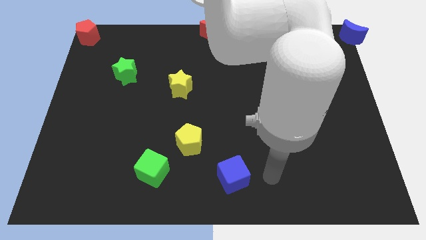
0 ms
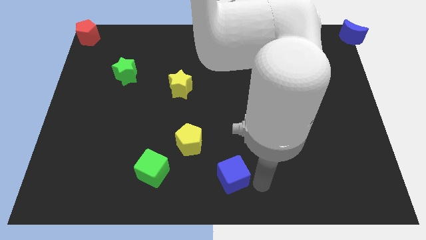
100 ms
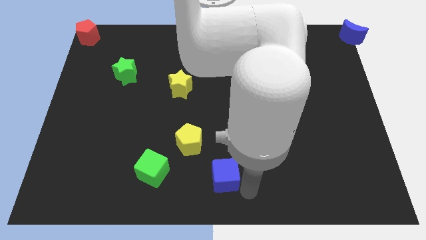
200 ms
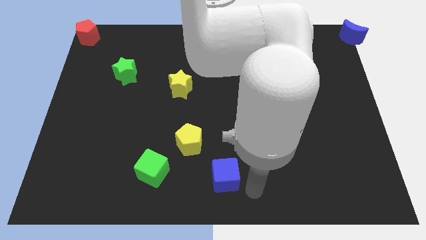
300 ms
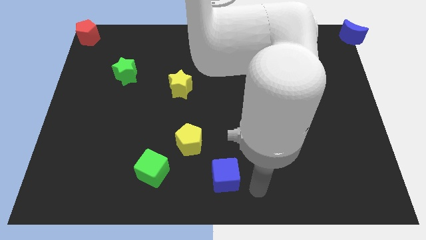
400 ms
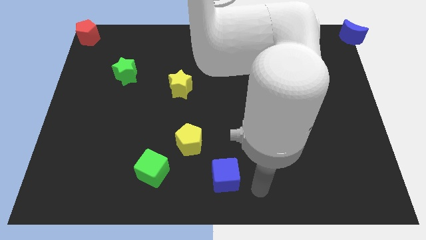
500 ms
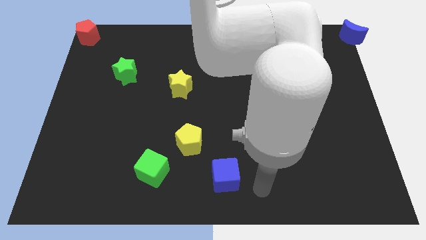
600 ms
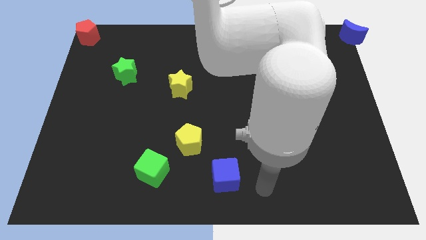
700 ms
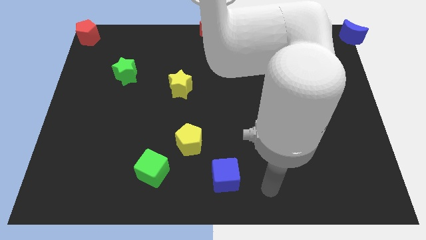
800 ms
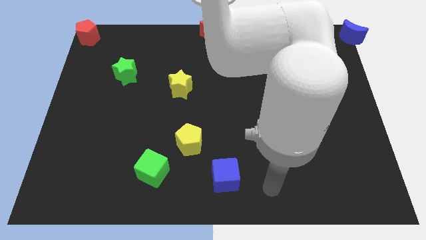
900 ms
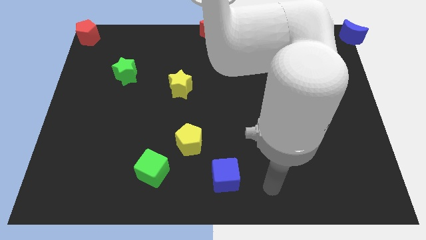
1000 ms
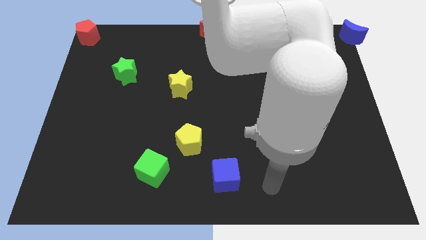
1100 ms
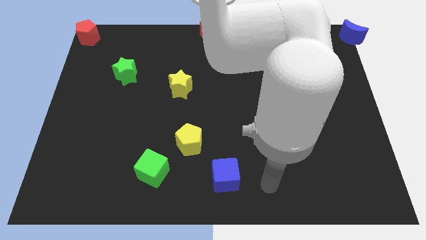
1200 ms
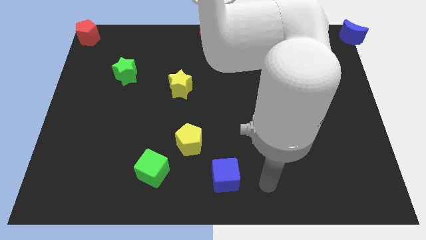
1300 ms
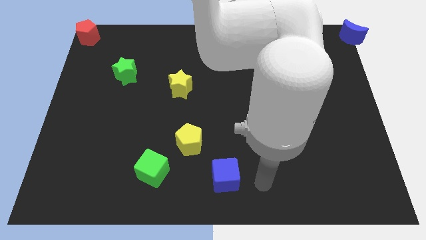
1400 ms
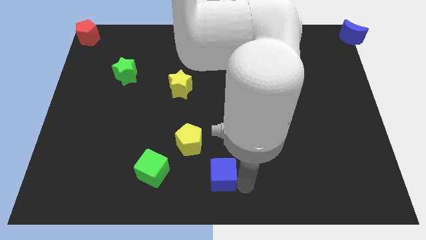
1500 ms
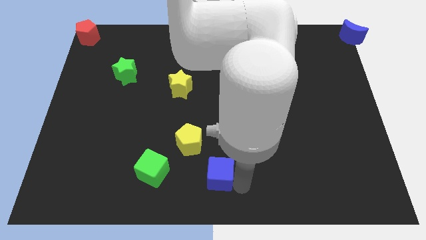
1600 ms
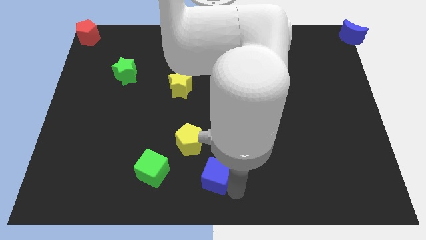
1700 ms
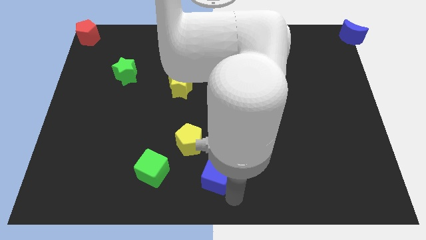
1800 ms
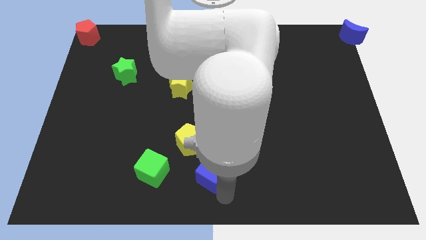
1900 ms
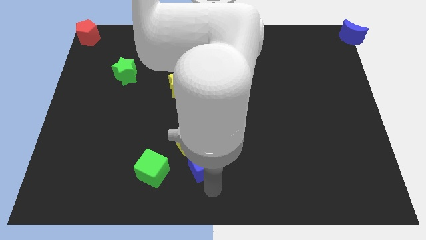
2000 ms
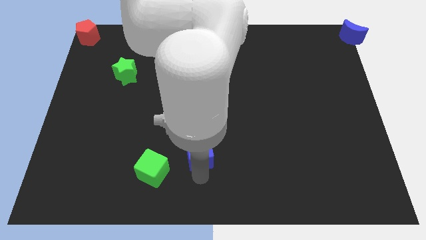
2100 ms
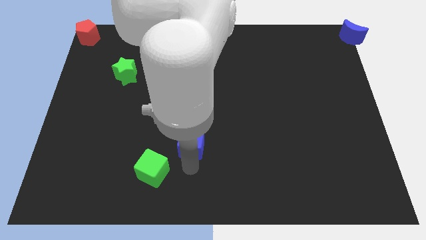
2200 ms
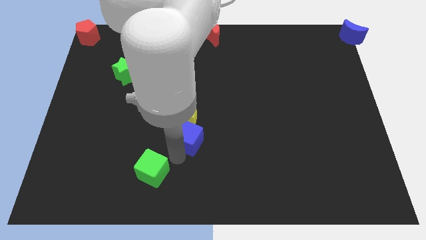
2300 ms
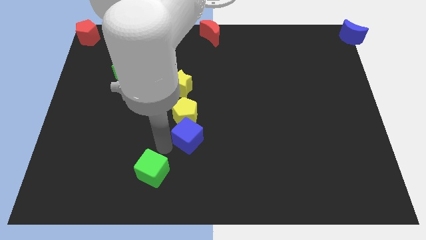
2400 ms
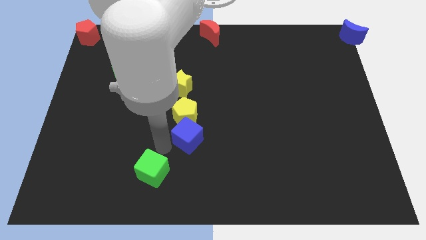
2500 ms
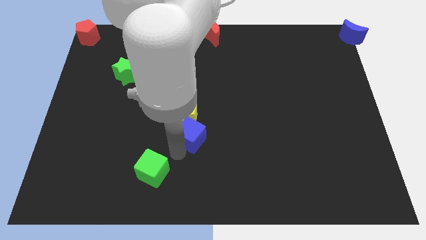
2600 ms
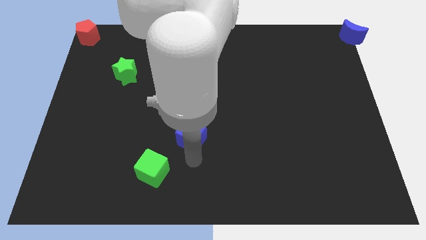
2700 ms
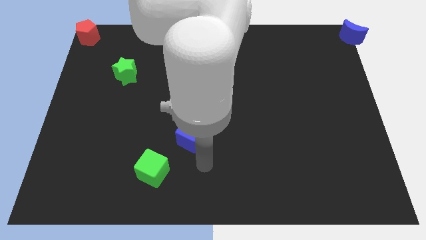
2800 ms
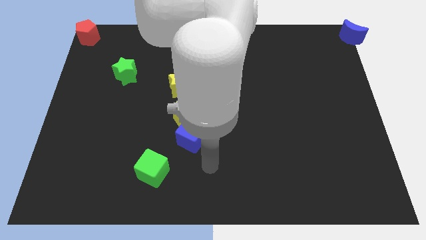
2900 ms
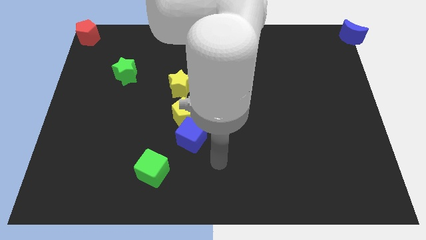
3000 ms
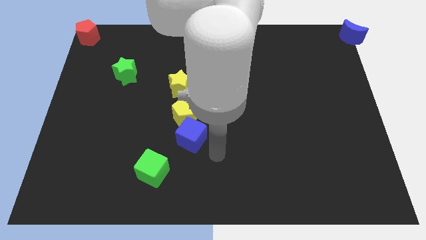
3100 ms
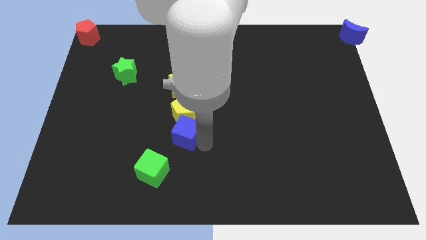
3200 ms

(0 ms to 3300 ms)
push blue cube in to yellow pentagon

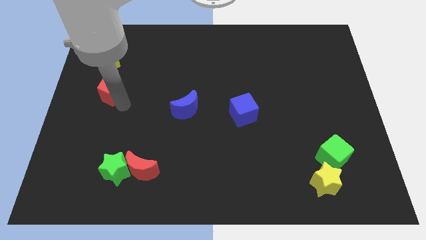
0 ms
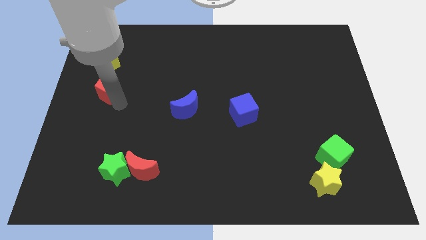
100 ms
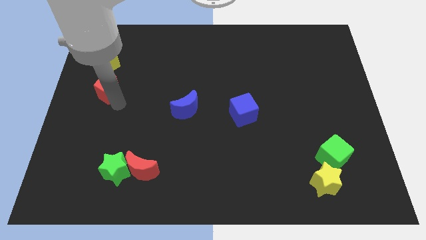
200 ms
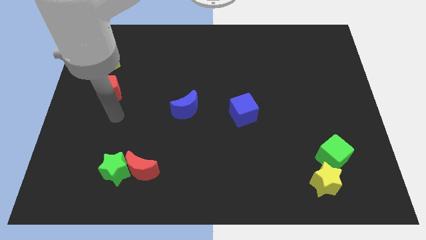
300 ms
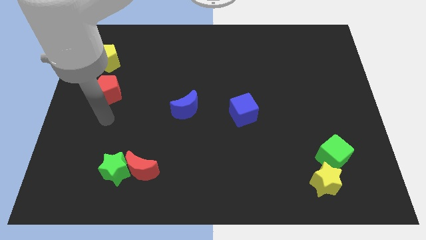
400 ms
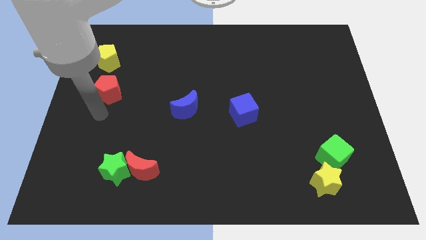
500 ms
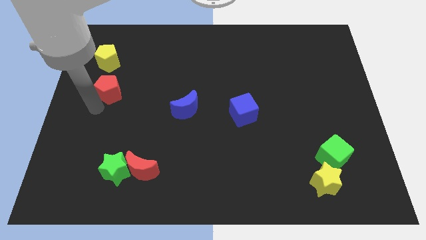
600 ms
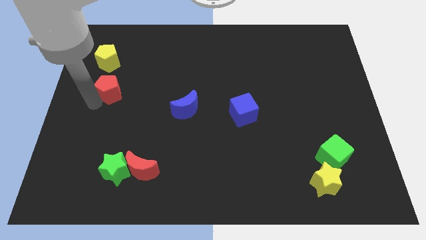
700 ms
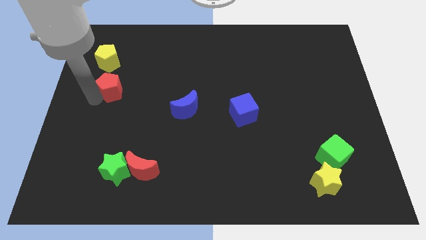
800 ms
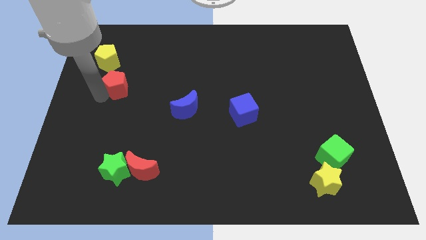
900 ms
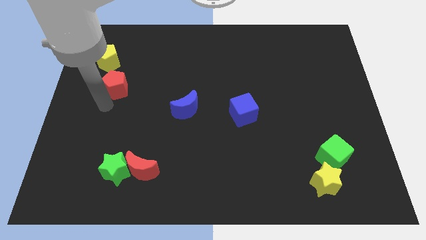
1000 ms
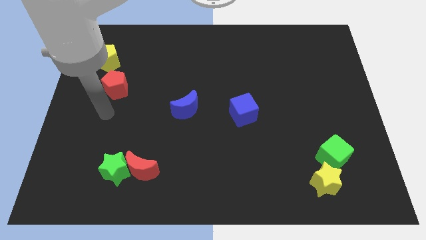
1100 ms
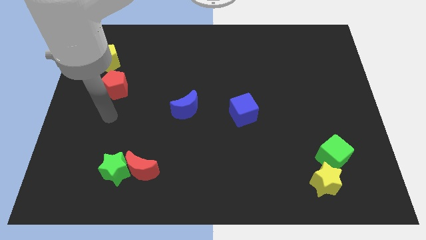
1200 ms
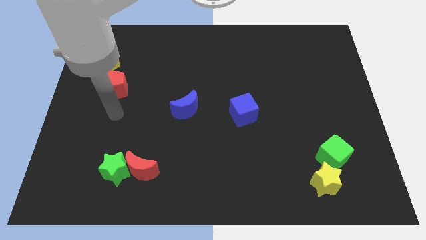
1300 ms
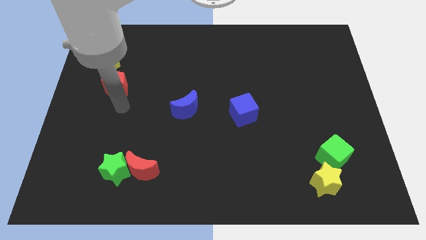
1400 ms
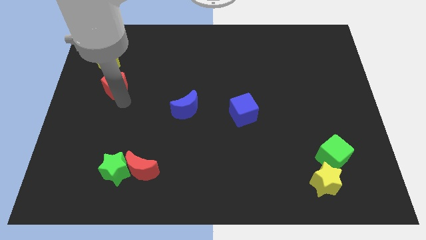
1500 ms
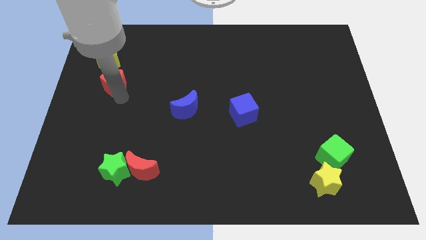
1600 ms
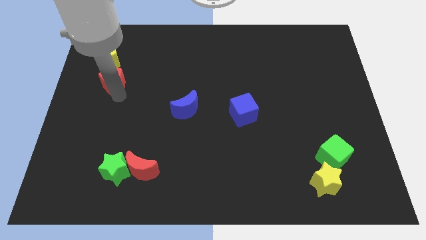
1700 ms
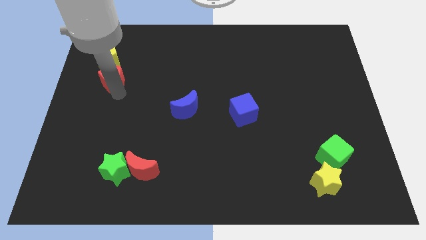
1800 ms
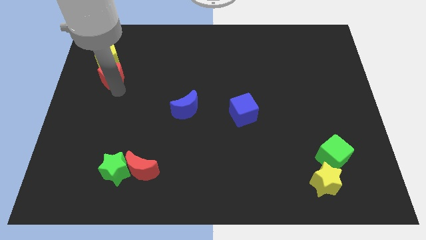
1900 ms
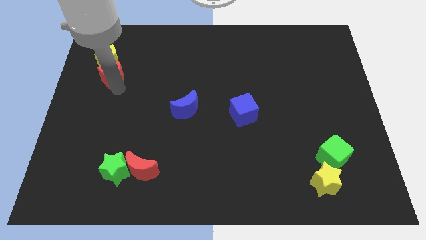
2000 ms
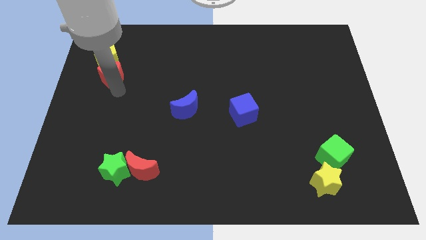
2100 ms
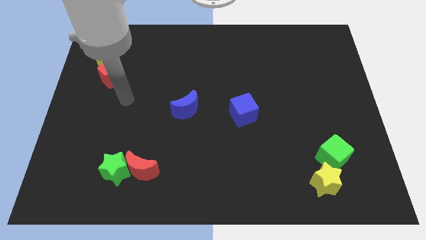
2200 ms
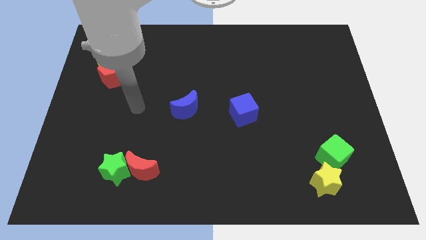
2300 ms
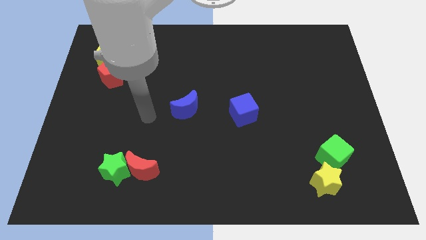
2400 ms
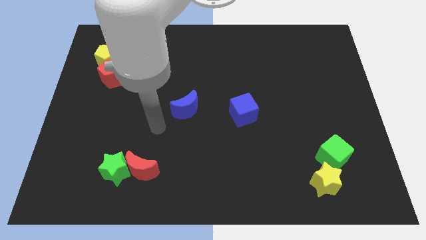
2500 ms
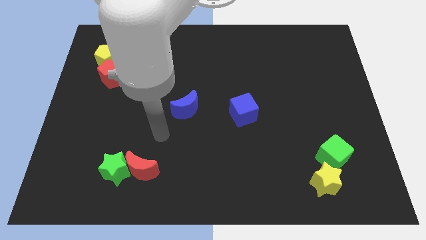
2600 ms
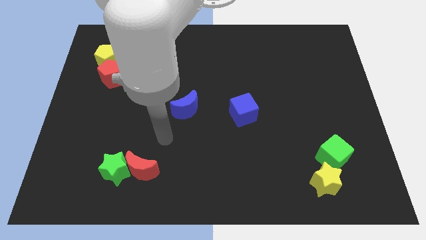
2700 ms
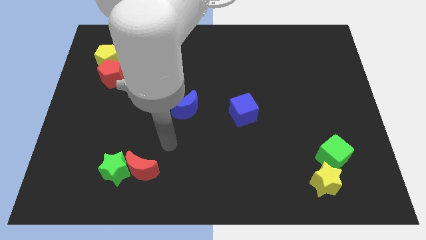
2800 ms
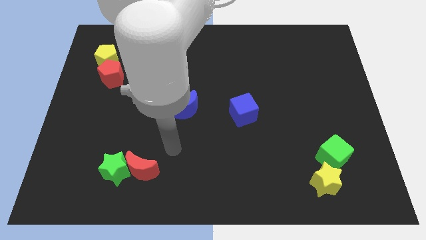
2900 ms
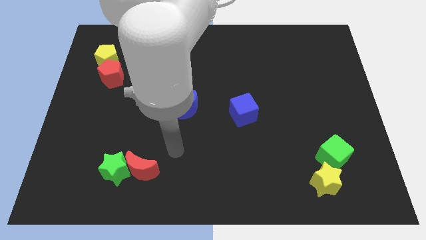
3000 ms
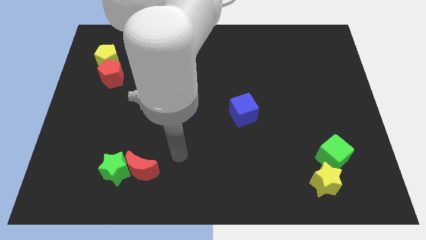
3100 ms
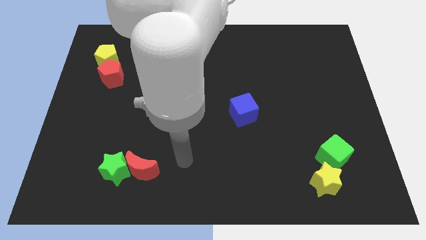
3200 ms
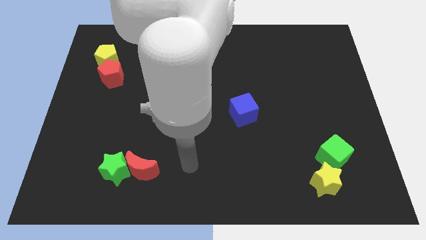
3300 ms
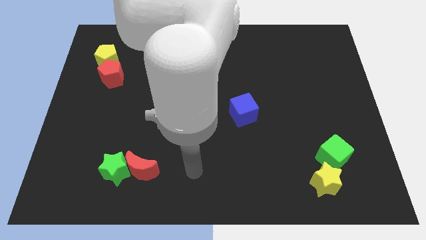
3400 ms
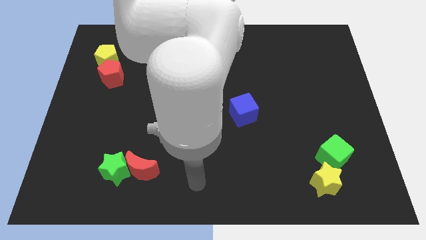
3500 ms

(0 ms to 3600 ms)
slide the red pentagon into the yellow pentagon

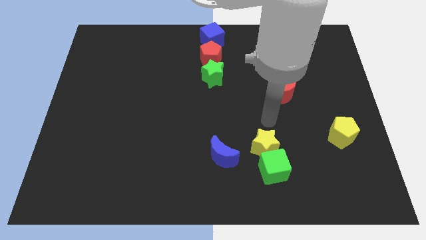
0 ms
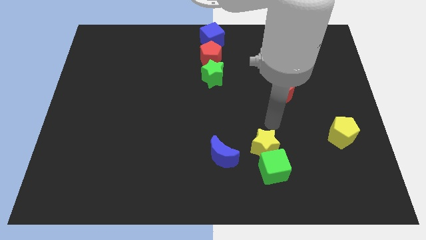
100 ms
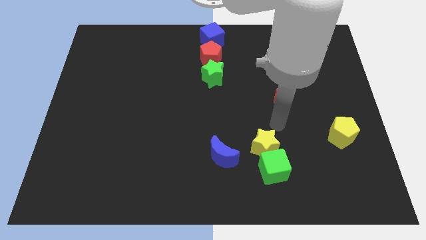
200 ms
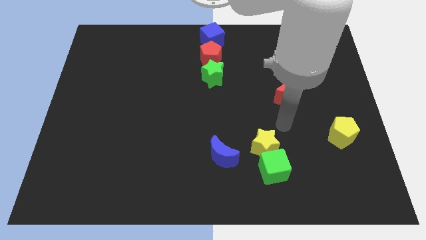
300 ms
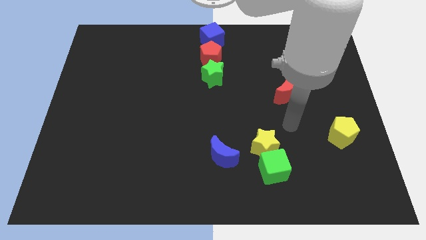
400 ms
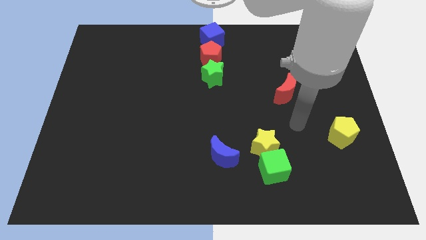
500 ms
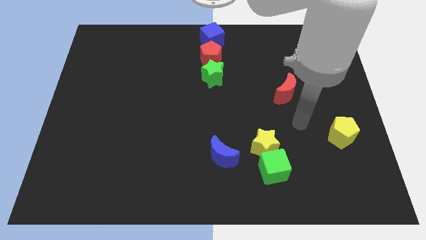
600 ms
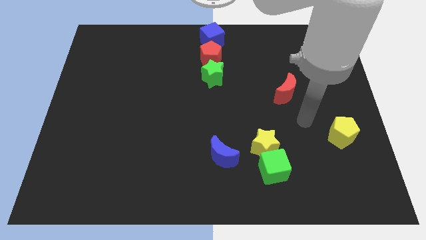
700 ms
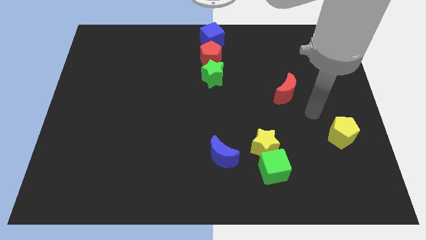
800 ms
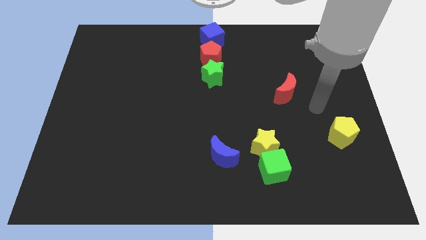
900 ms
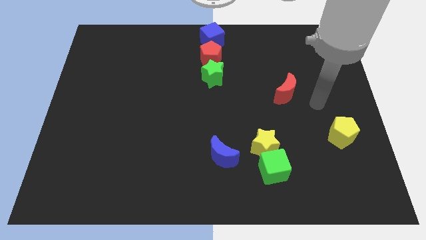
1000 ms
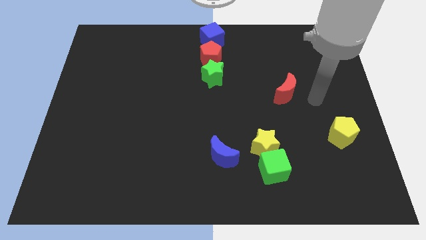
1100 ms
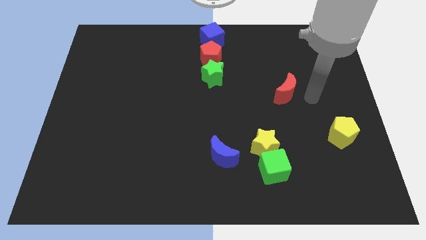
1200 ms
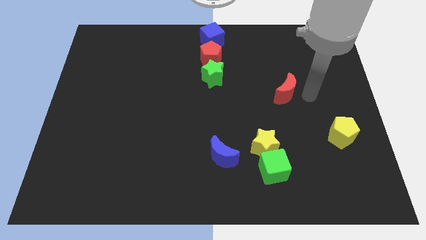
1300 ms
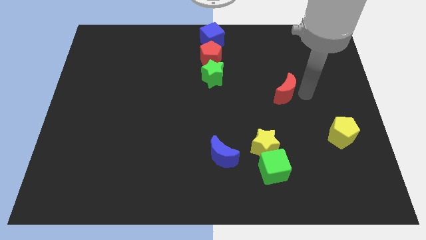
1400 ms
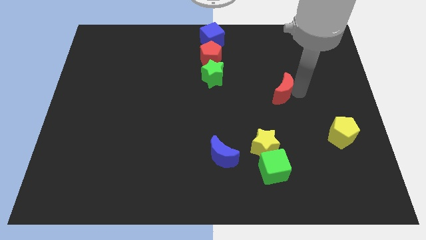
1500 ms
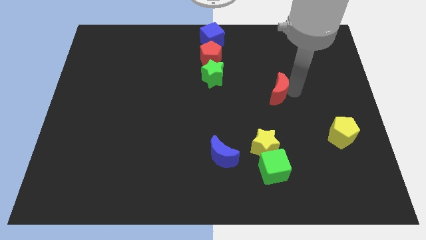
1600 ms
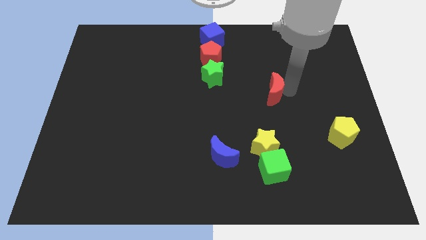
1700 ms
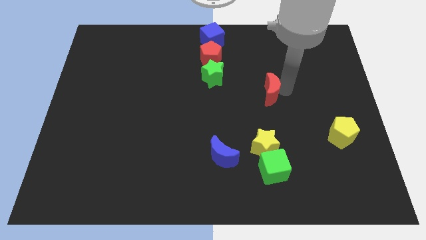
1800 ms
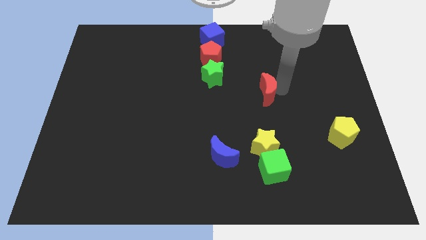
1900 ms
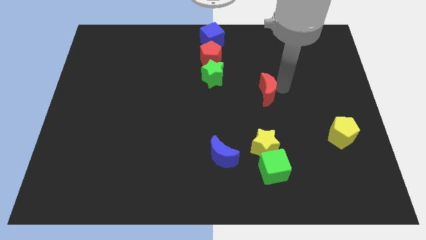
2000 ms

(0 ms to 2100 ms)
move your arm to the right of the red moon

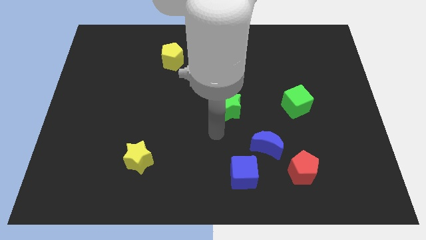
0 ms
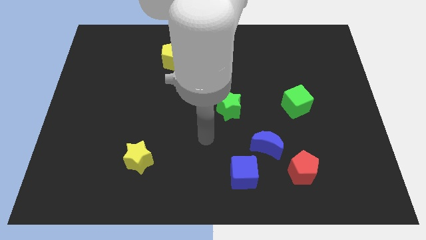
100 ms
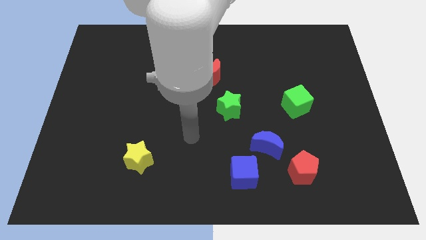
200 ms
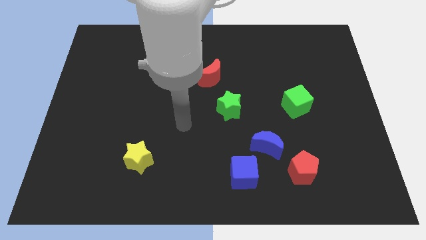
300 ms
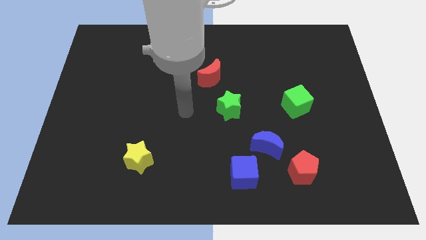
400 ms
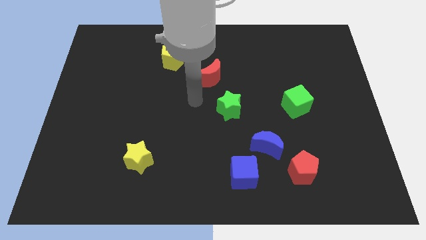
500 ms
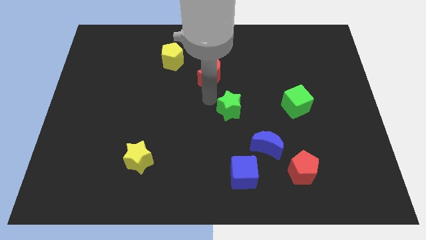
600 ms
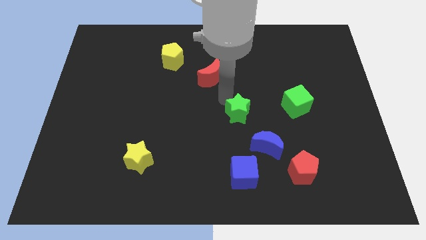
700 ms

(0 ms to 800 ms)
place green star vertically above blue cube
